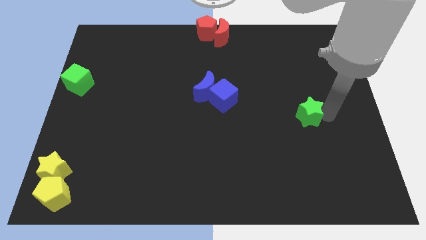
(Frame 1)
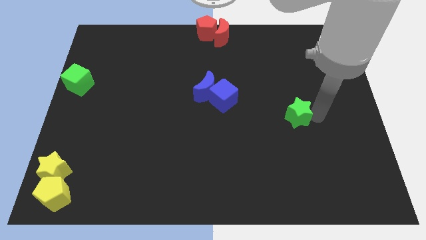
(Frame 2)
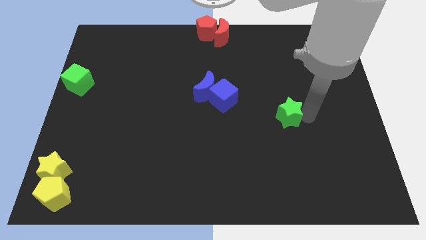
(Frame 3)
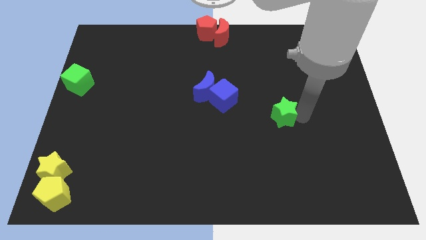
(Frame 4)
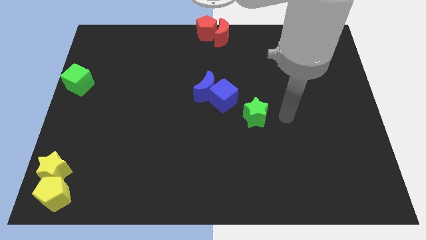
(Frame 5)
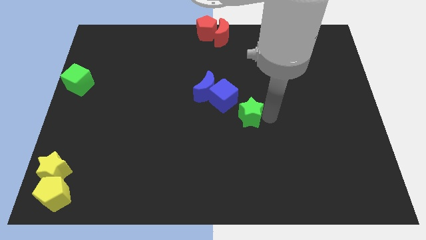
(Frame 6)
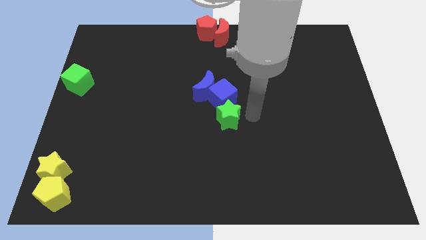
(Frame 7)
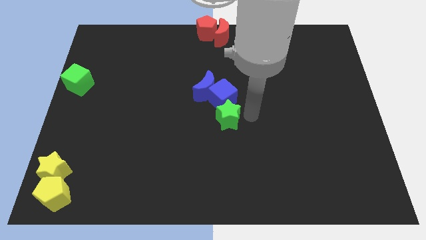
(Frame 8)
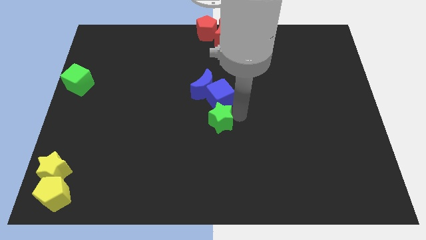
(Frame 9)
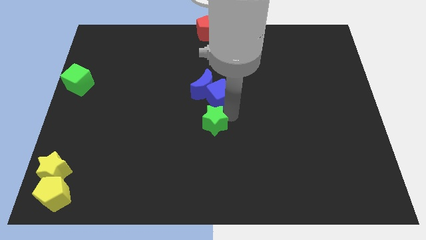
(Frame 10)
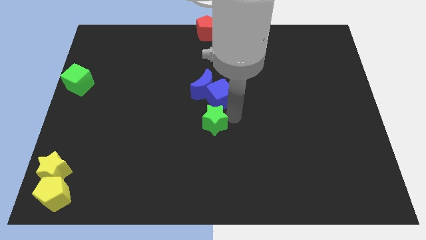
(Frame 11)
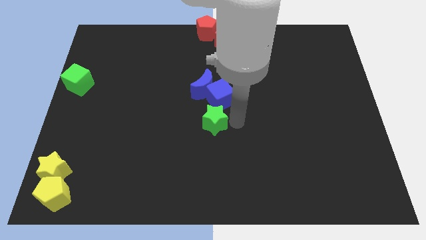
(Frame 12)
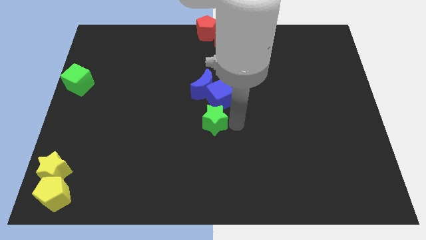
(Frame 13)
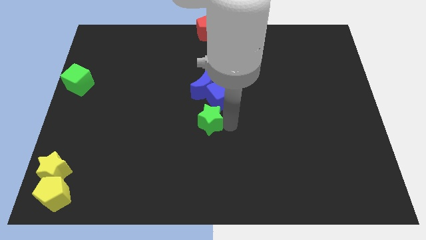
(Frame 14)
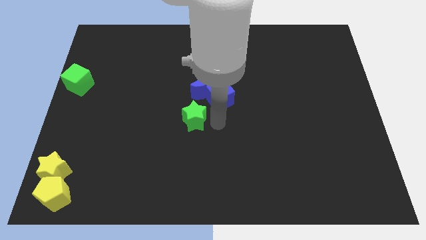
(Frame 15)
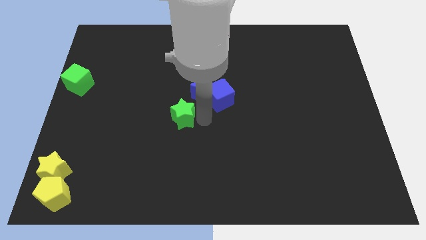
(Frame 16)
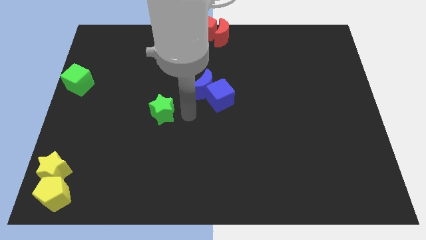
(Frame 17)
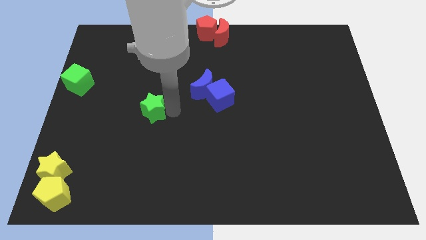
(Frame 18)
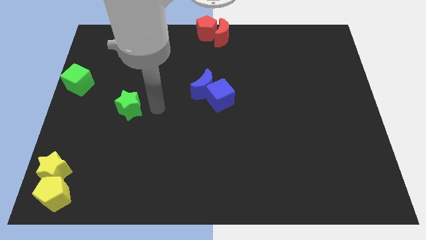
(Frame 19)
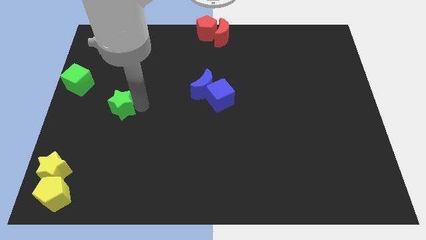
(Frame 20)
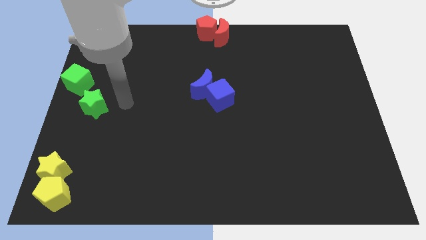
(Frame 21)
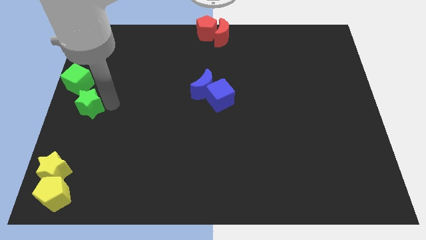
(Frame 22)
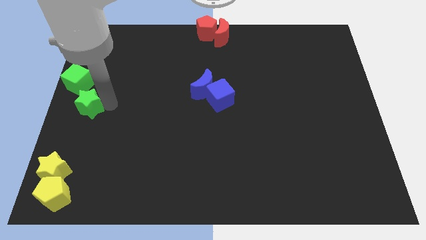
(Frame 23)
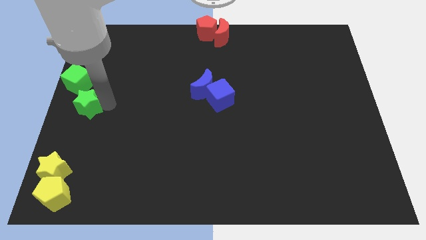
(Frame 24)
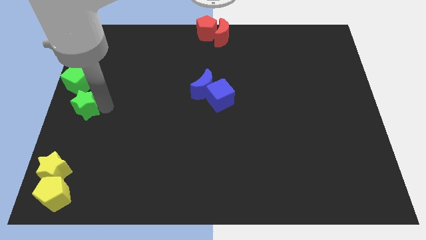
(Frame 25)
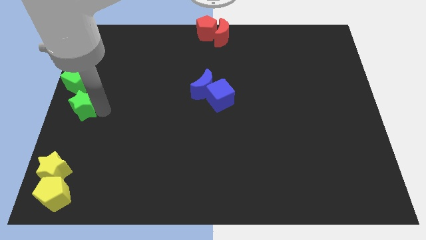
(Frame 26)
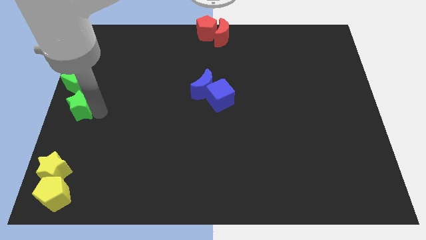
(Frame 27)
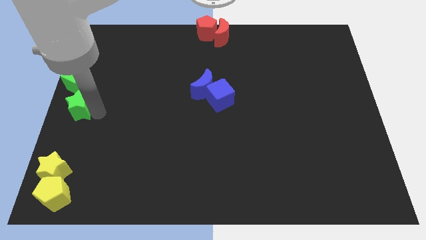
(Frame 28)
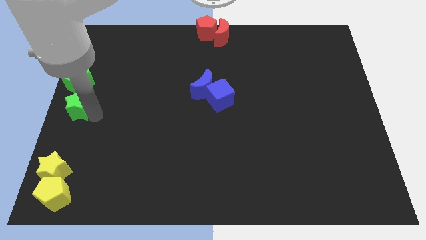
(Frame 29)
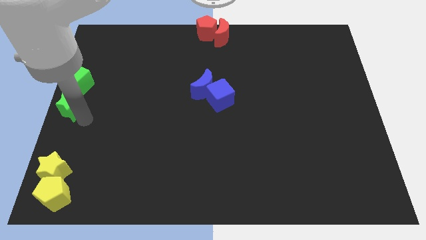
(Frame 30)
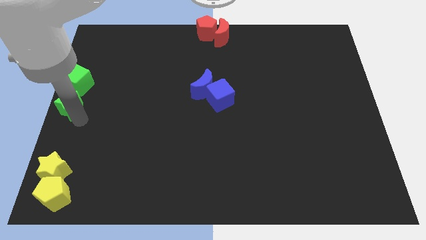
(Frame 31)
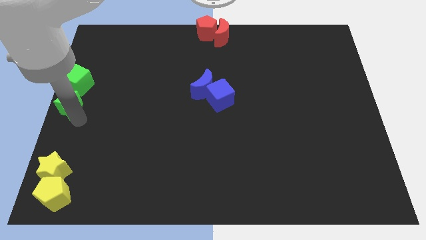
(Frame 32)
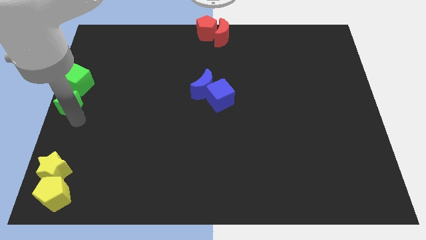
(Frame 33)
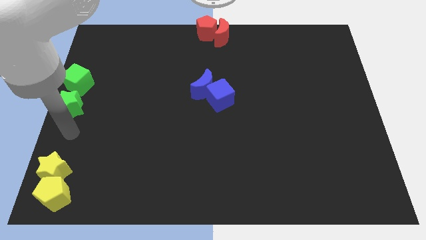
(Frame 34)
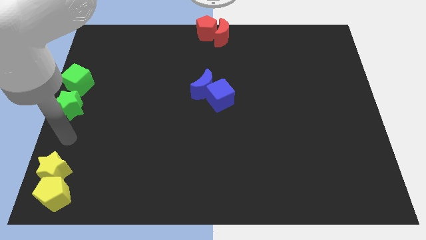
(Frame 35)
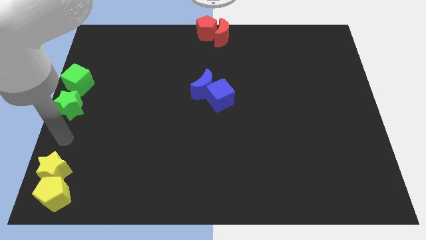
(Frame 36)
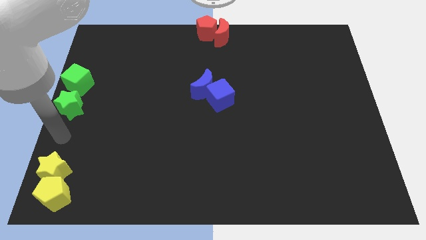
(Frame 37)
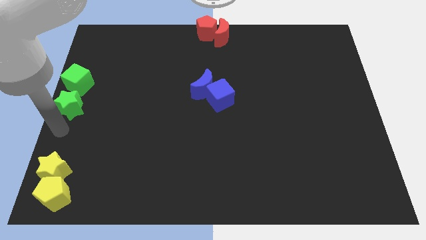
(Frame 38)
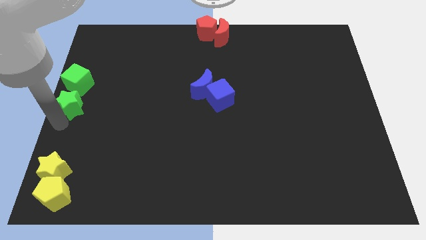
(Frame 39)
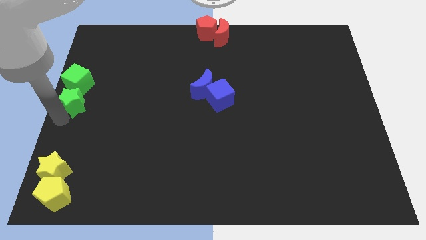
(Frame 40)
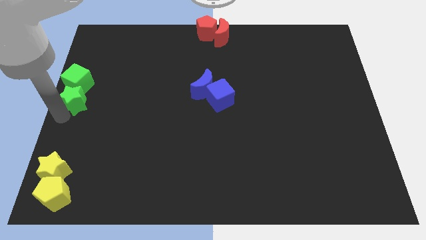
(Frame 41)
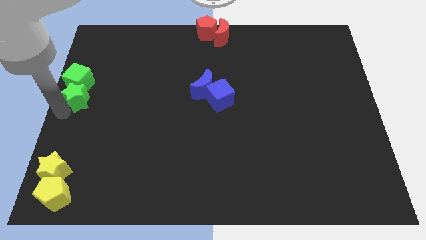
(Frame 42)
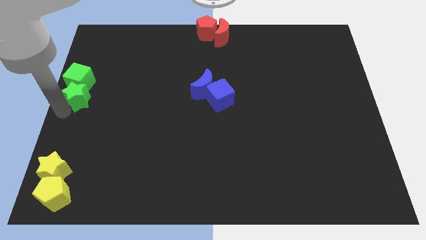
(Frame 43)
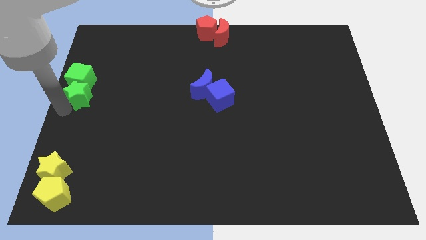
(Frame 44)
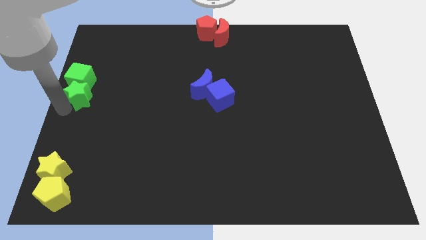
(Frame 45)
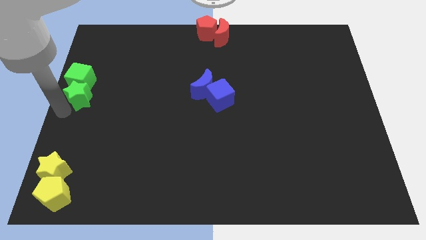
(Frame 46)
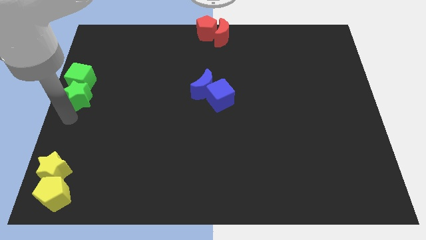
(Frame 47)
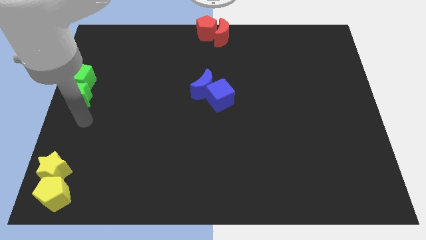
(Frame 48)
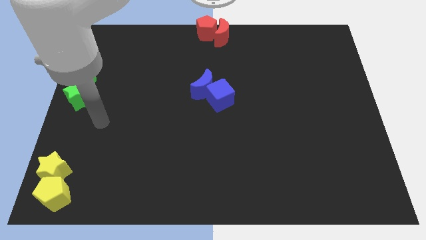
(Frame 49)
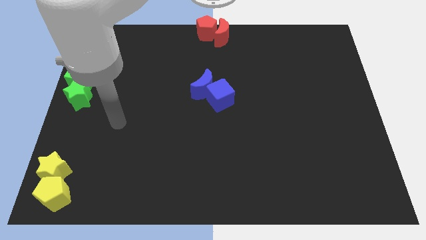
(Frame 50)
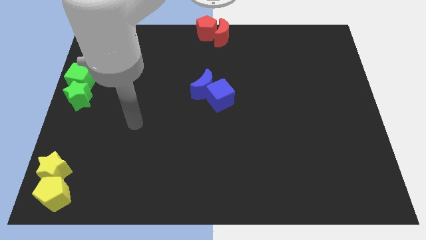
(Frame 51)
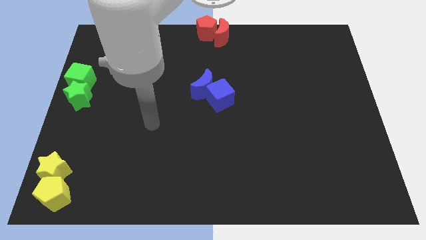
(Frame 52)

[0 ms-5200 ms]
push the green star into the green cube

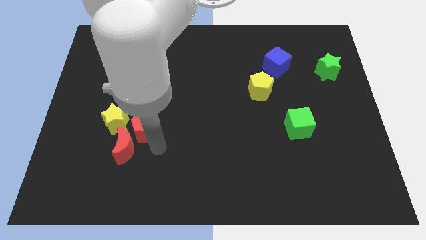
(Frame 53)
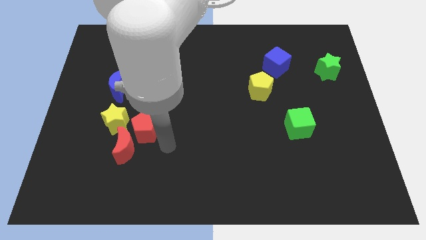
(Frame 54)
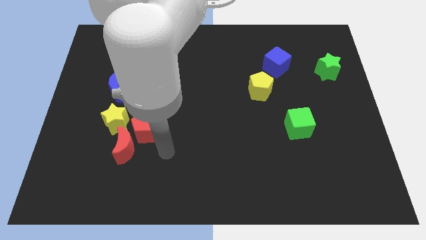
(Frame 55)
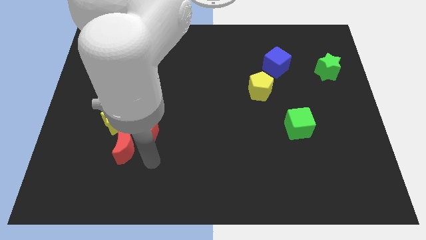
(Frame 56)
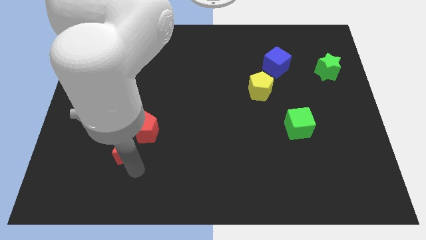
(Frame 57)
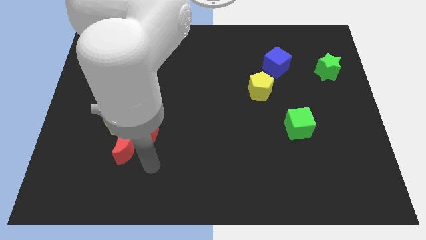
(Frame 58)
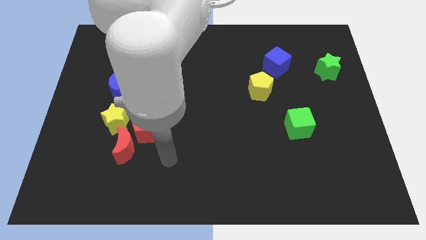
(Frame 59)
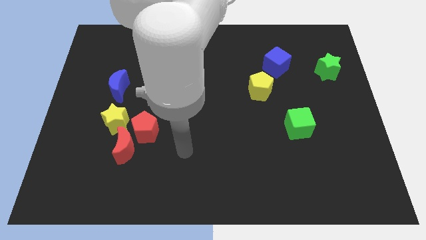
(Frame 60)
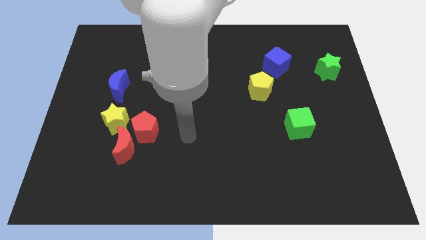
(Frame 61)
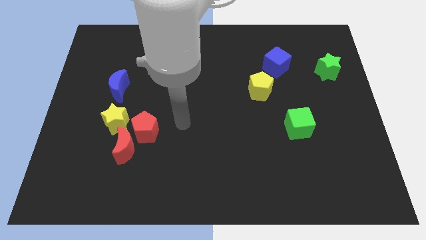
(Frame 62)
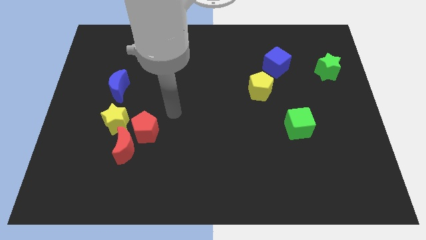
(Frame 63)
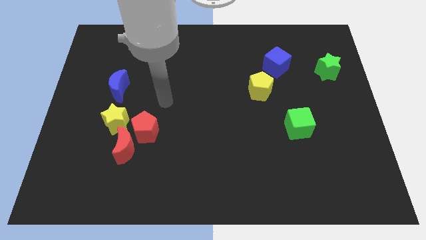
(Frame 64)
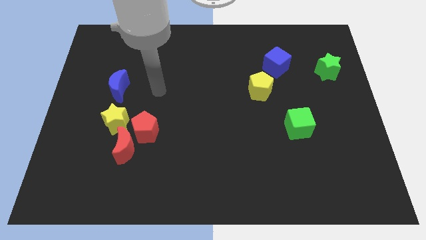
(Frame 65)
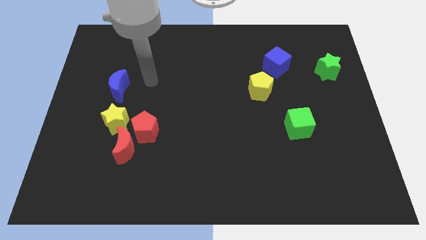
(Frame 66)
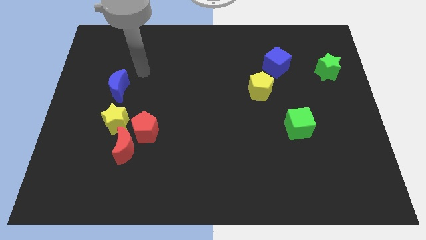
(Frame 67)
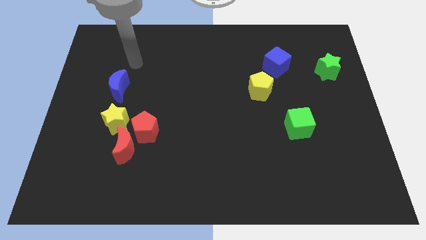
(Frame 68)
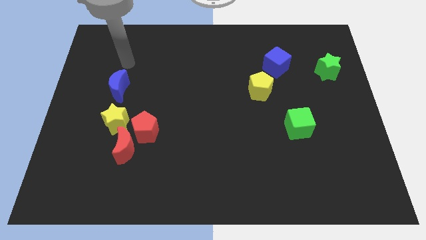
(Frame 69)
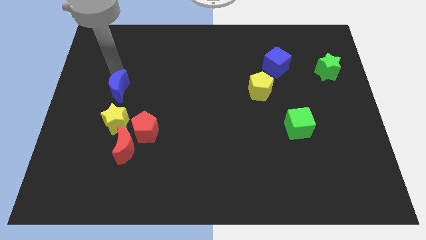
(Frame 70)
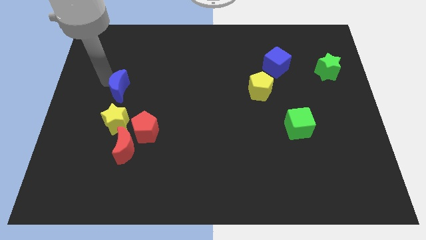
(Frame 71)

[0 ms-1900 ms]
move your arm away from the red pentagon

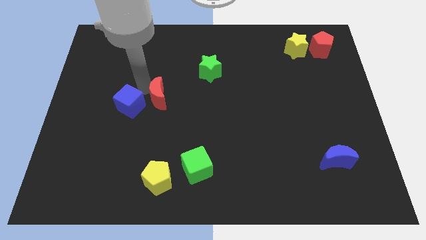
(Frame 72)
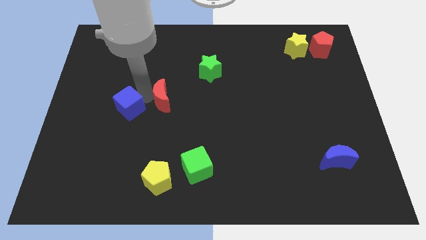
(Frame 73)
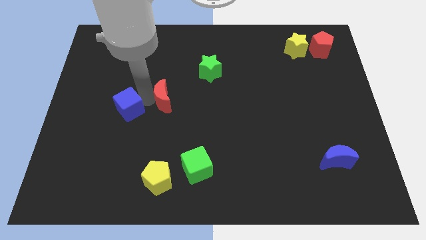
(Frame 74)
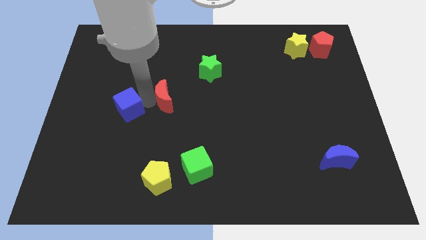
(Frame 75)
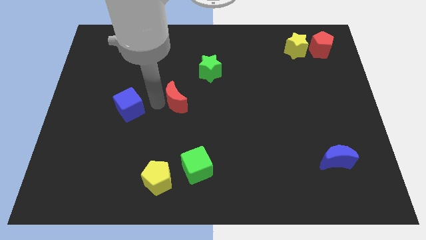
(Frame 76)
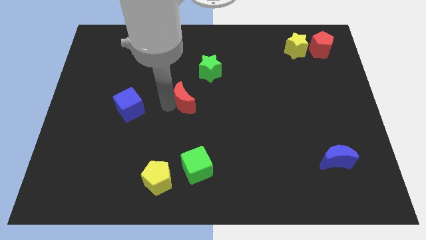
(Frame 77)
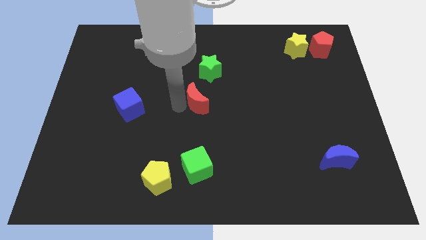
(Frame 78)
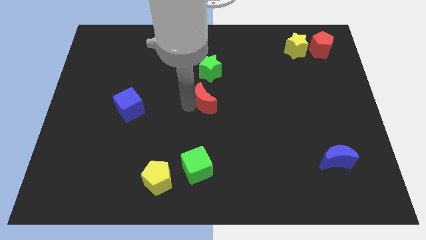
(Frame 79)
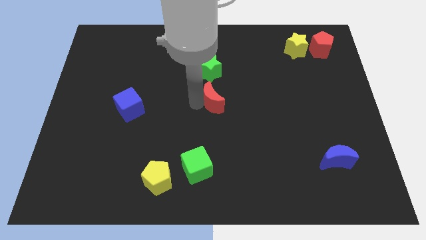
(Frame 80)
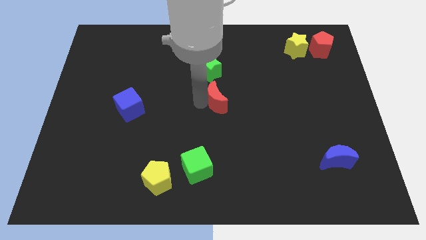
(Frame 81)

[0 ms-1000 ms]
place the red moon down to the green star

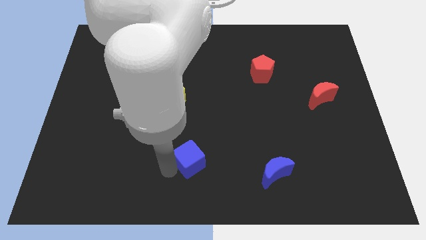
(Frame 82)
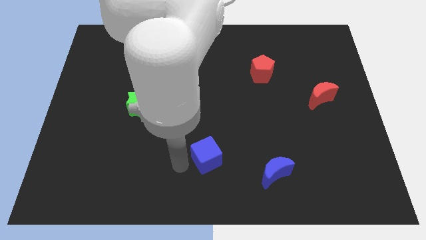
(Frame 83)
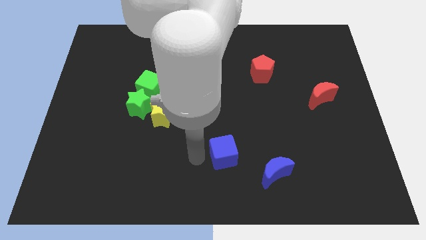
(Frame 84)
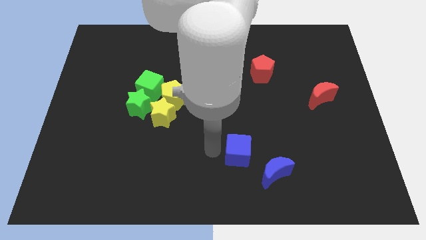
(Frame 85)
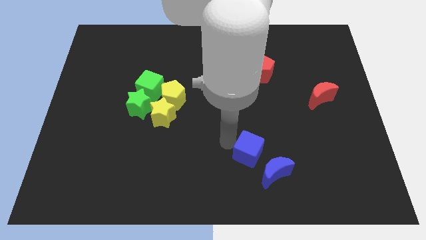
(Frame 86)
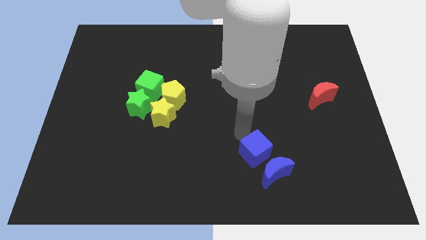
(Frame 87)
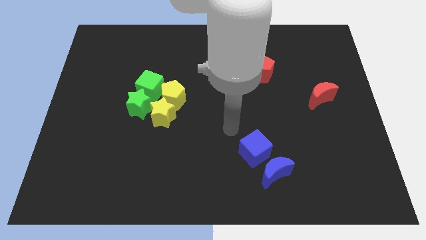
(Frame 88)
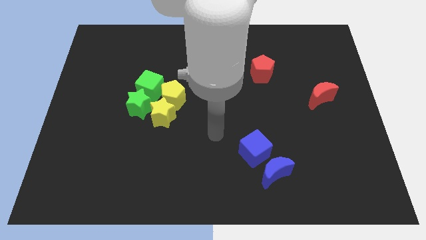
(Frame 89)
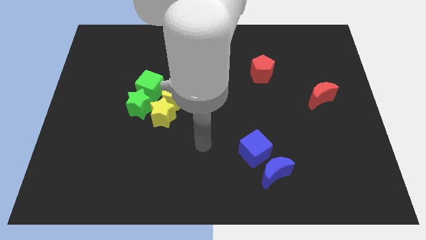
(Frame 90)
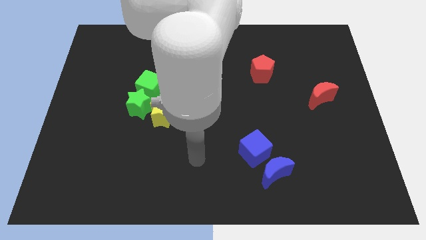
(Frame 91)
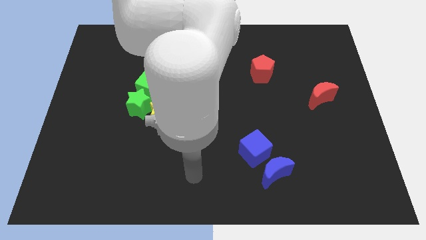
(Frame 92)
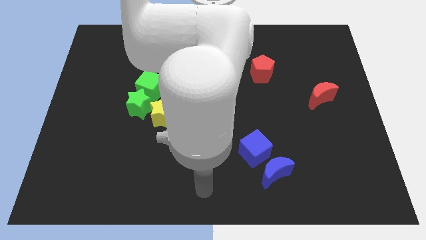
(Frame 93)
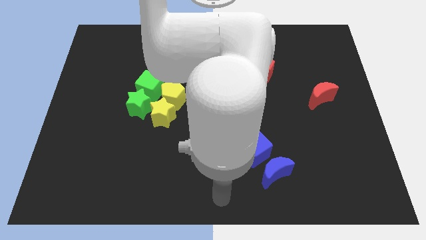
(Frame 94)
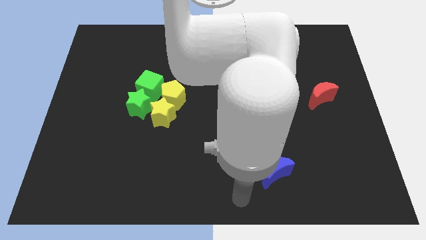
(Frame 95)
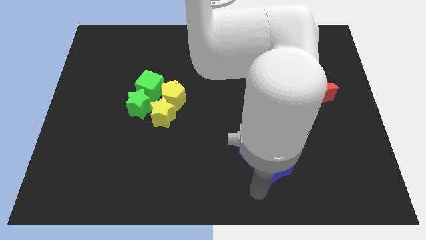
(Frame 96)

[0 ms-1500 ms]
place blue cube to the top of blue moon
